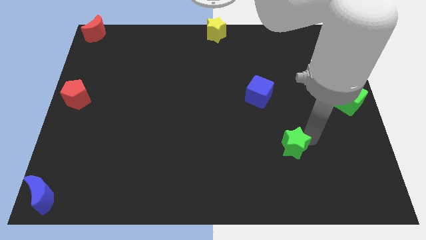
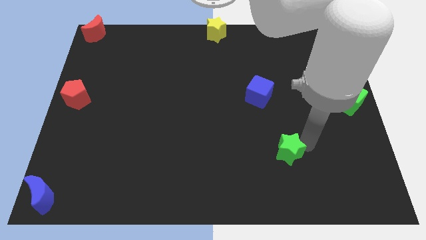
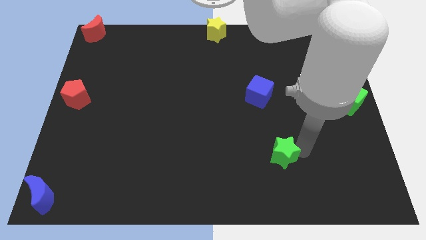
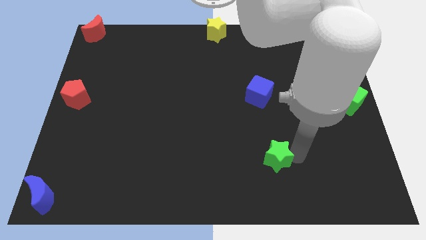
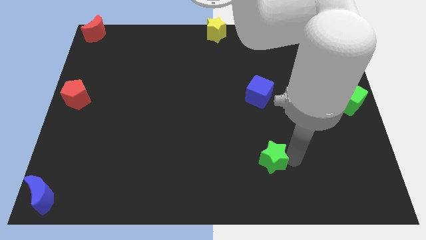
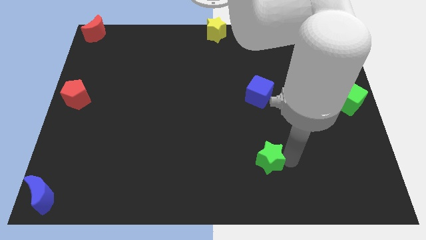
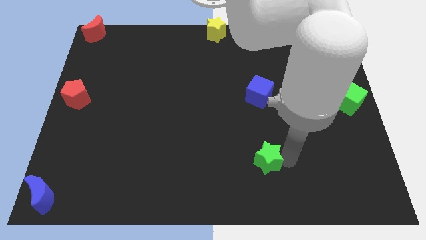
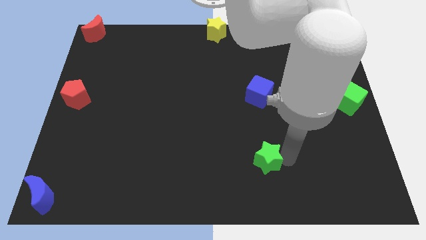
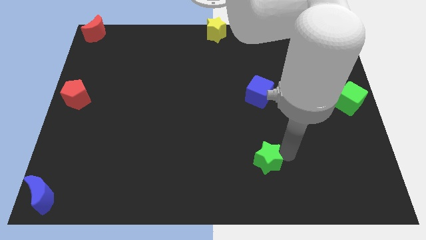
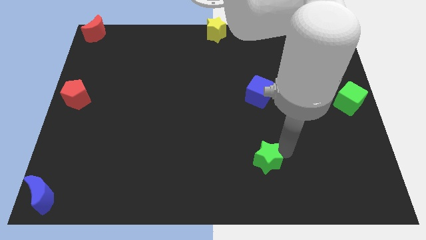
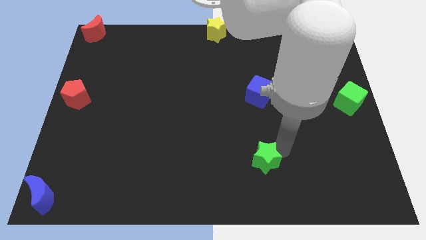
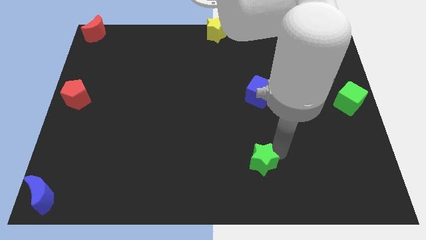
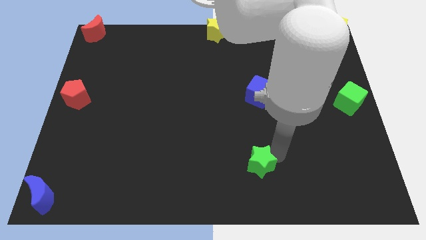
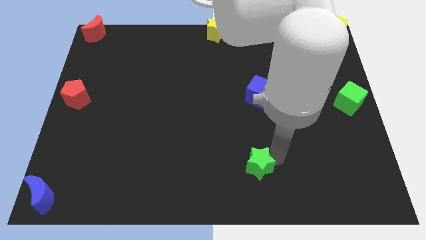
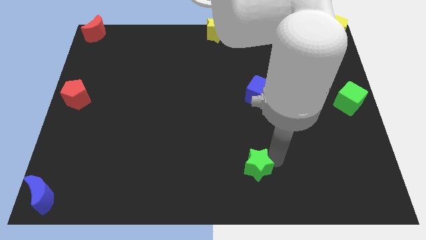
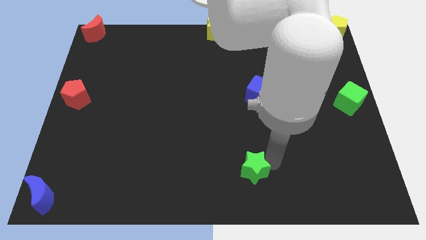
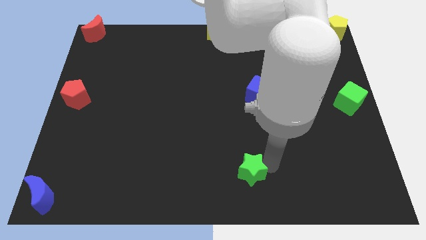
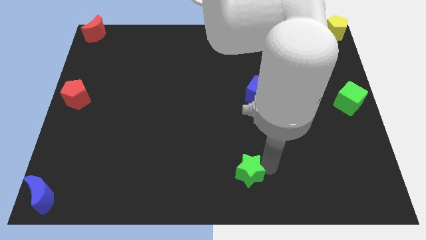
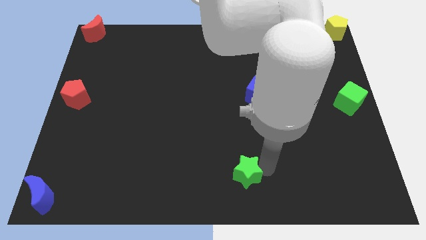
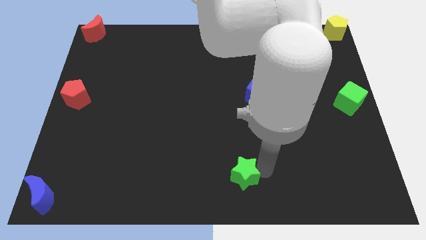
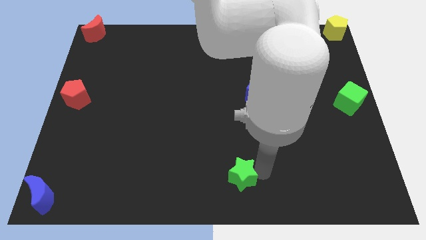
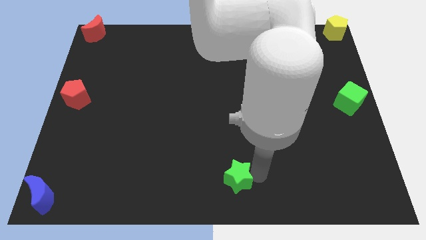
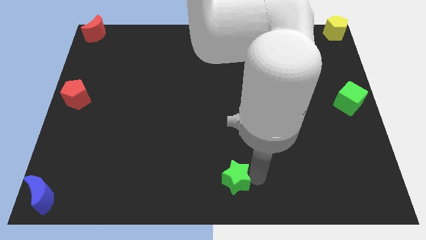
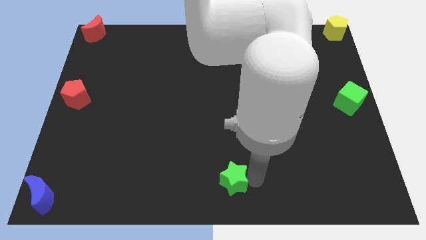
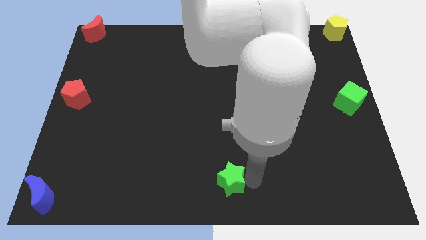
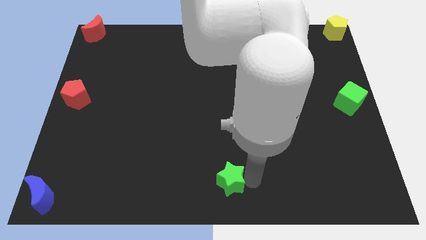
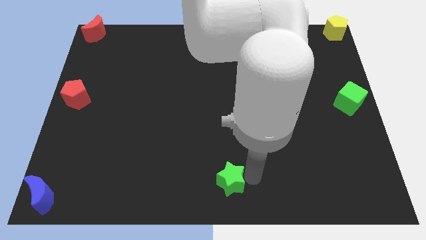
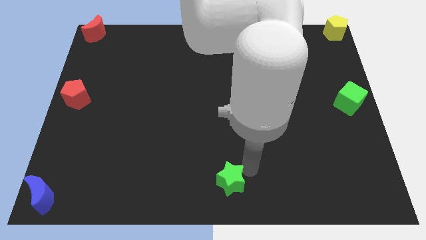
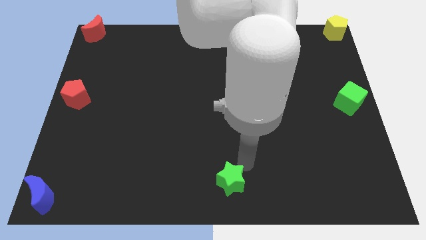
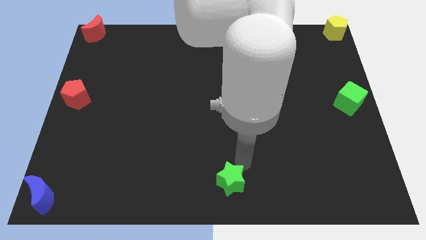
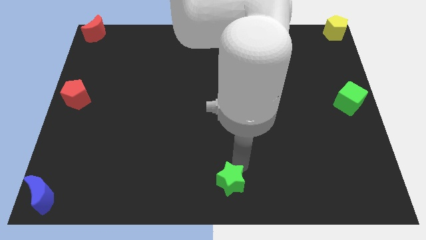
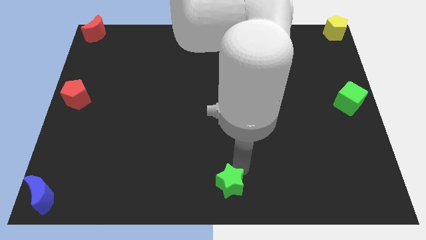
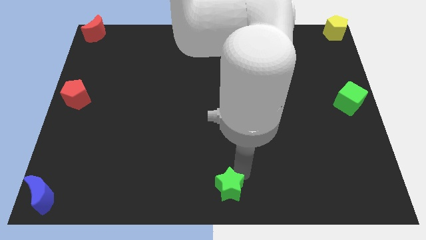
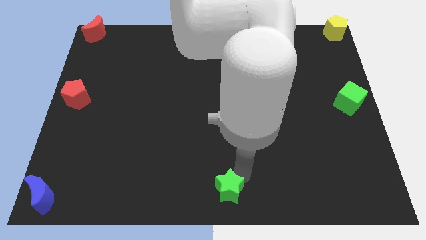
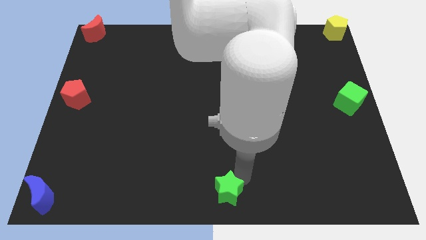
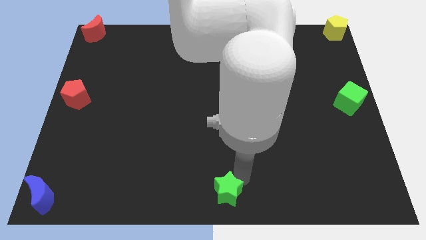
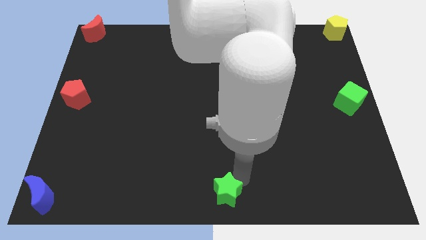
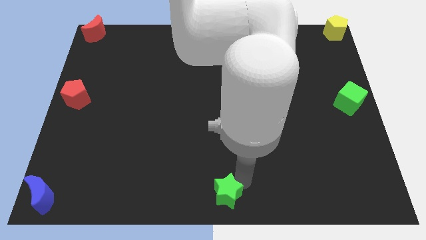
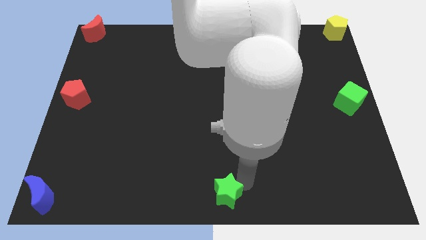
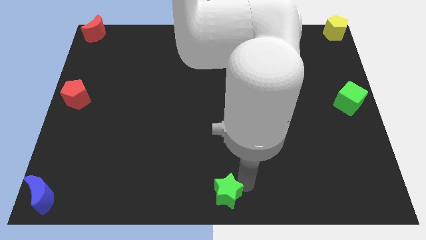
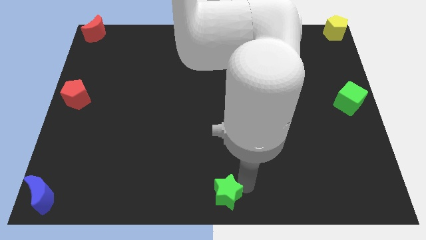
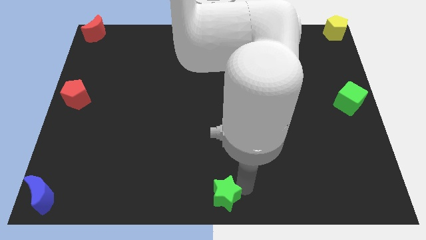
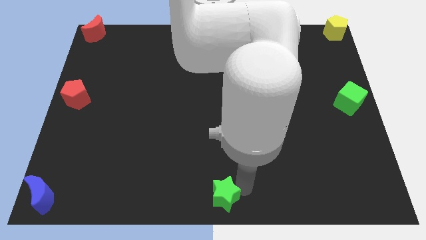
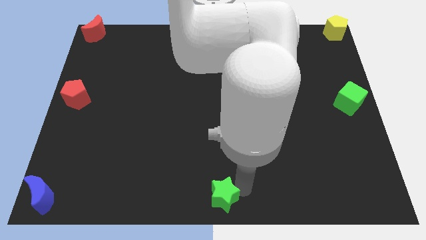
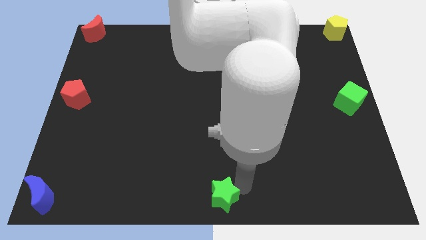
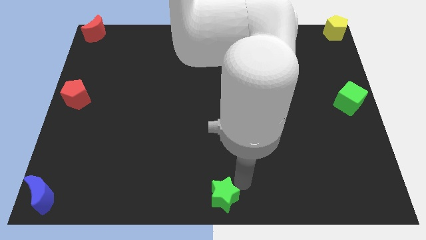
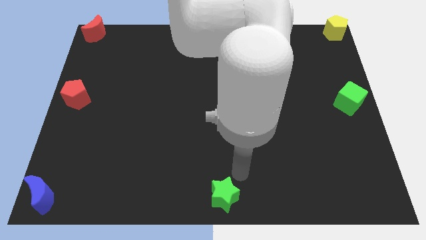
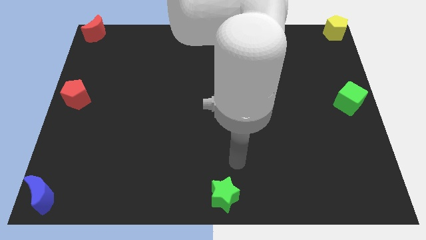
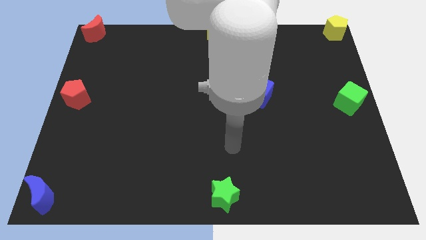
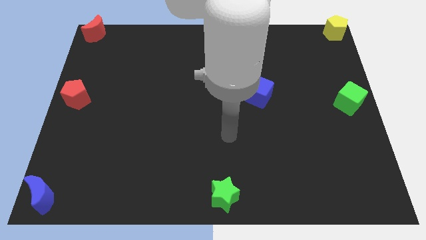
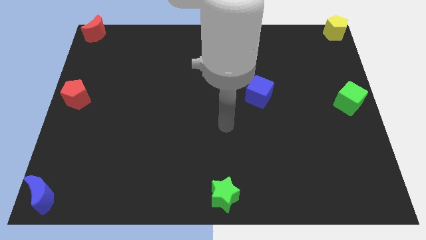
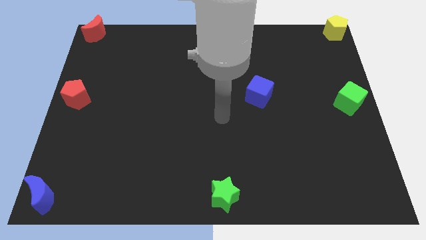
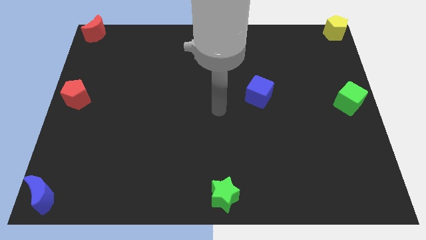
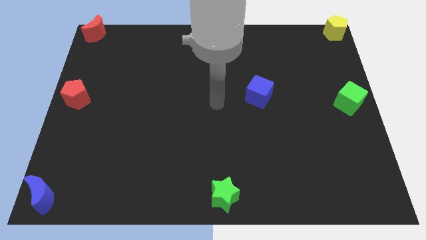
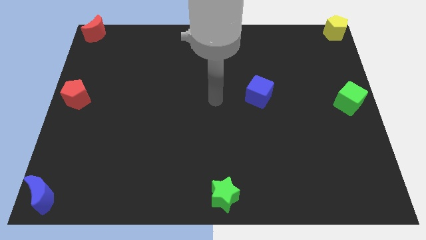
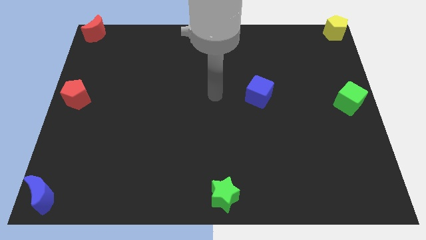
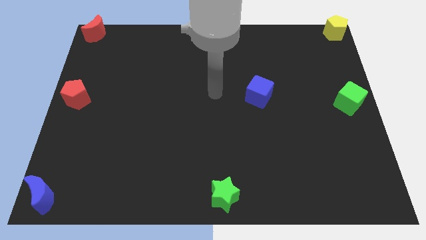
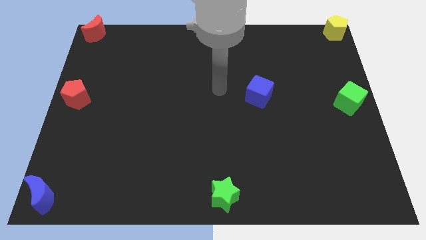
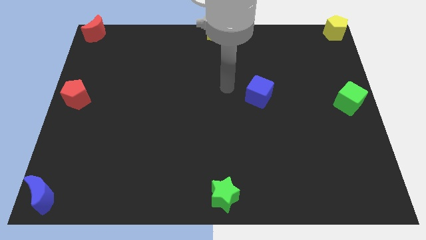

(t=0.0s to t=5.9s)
move the green star to the bottom center

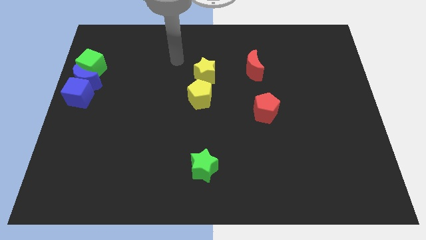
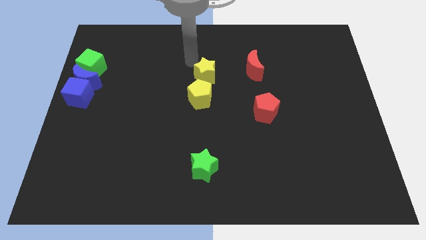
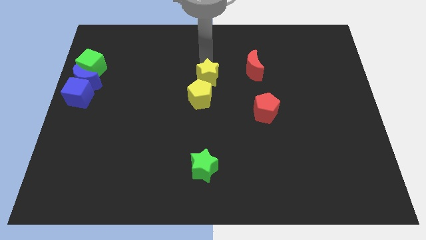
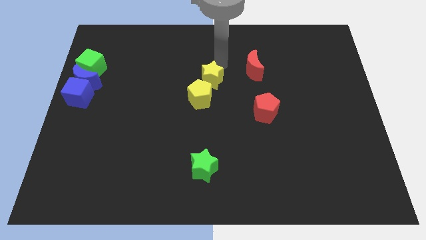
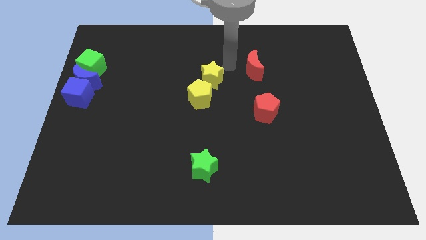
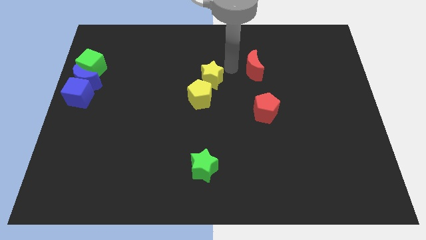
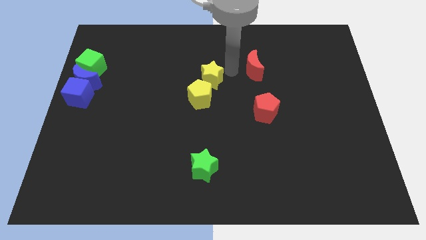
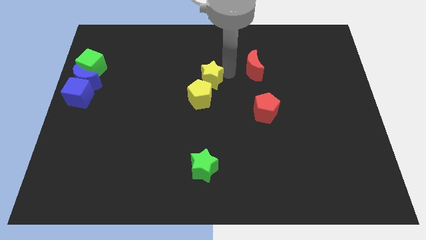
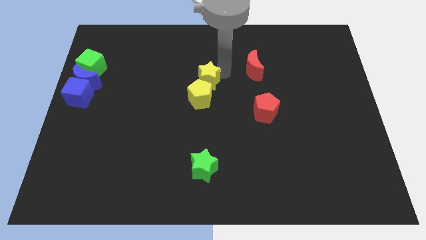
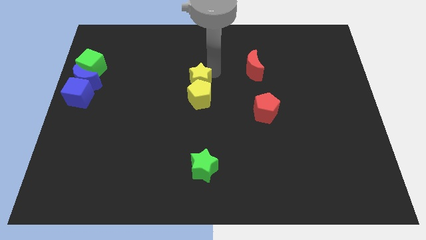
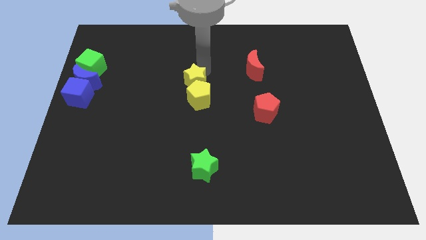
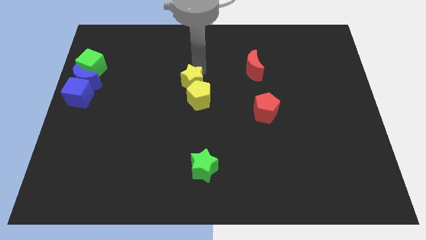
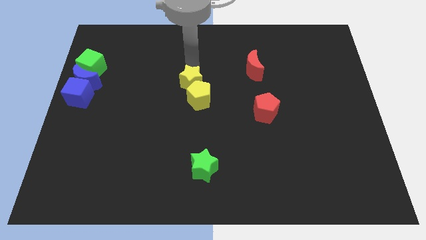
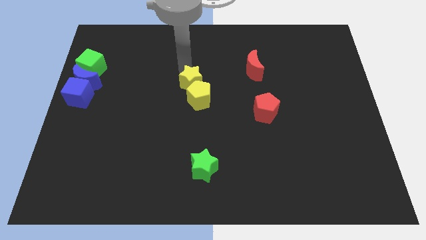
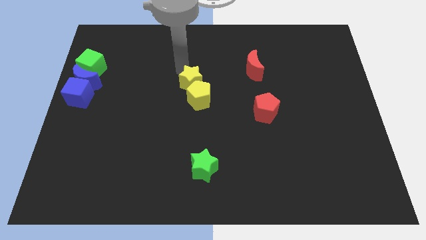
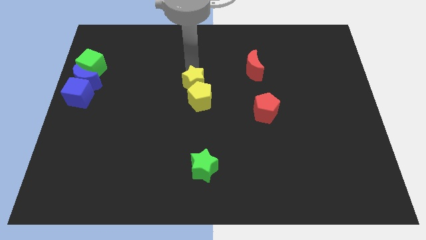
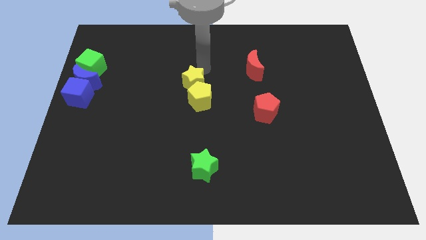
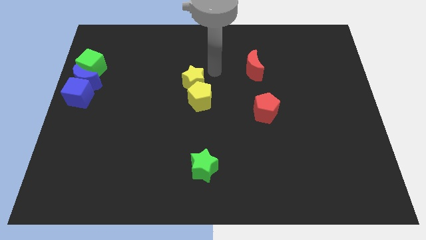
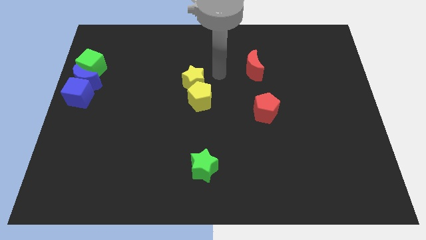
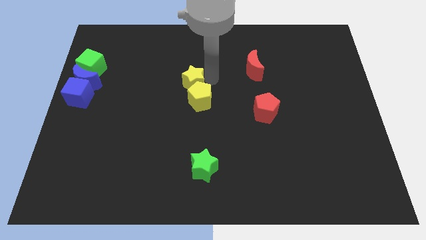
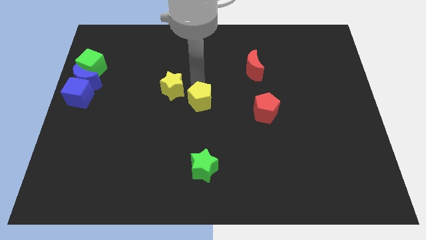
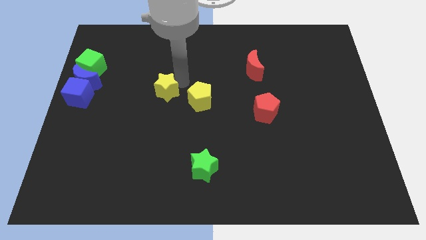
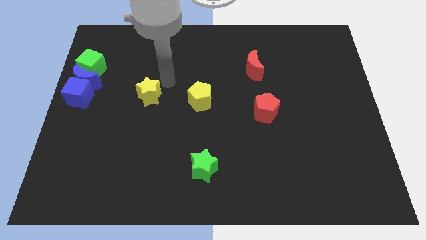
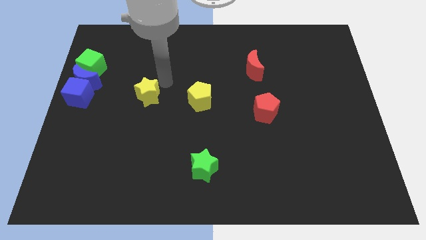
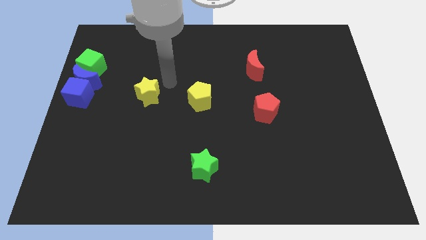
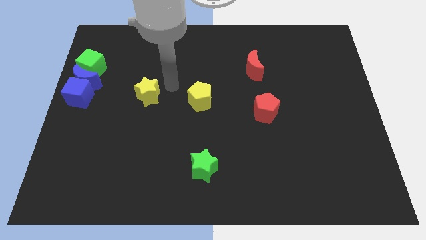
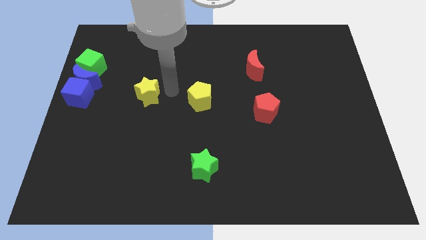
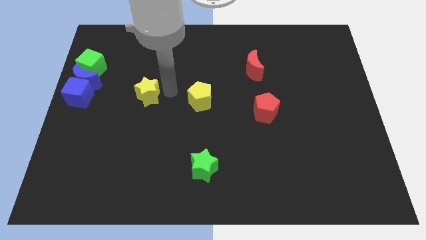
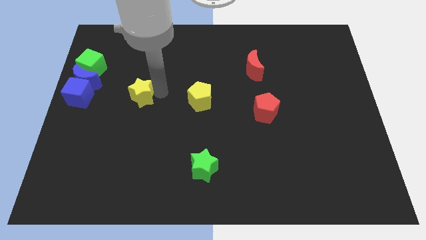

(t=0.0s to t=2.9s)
place the yellow star right to the blue cube

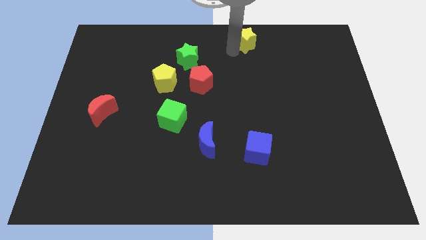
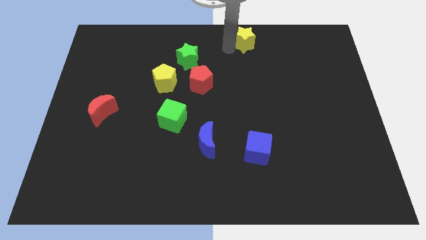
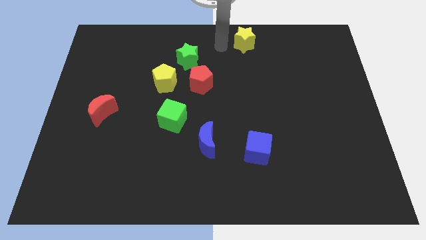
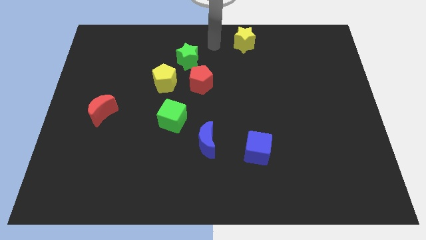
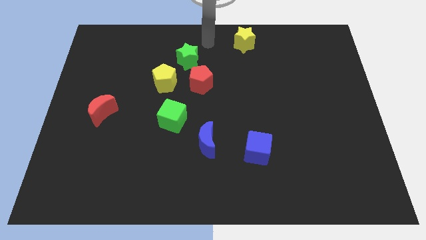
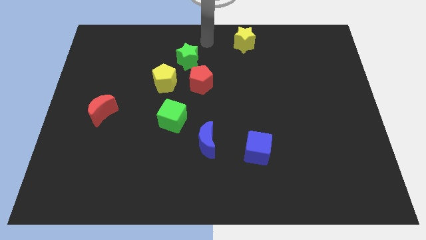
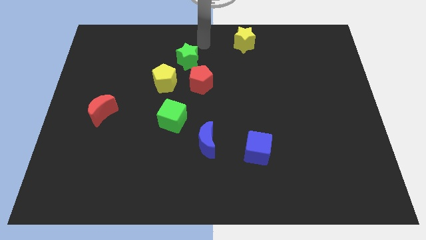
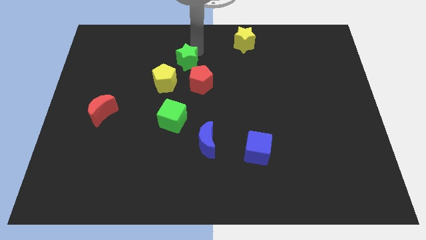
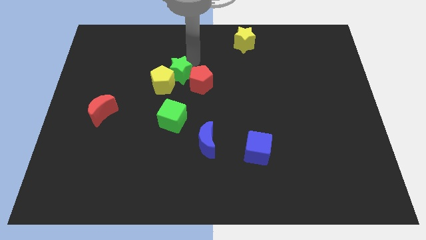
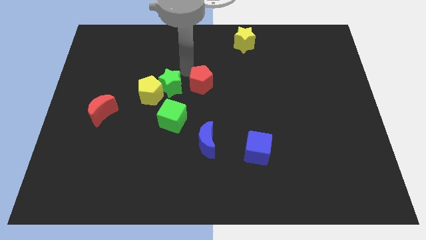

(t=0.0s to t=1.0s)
push the green star into the yellow pentagon
